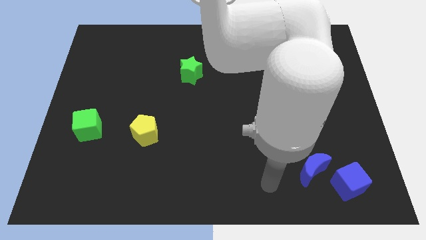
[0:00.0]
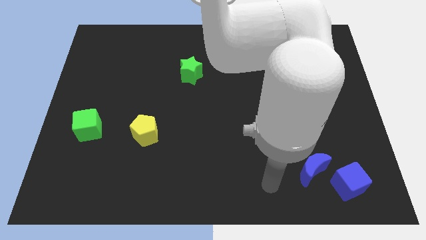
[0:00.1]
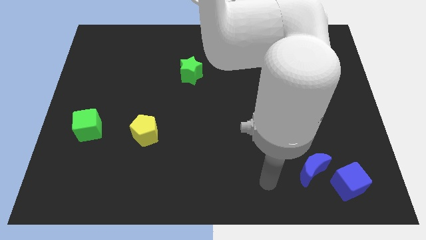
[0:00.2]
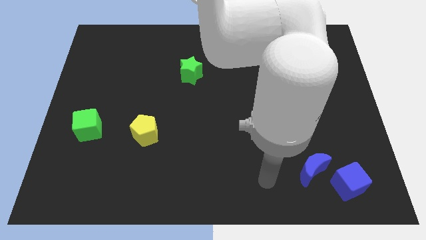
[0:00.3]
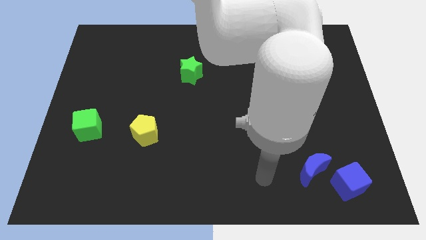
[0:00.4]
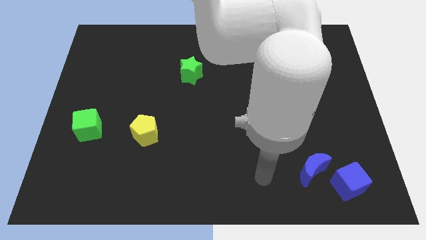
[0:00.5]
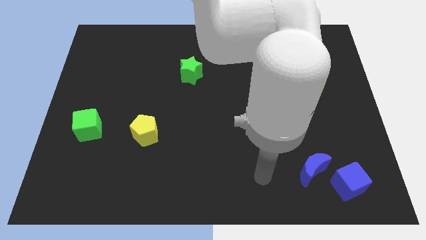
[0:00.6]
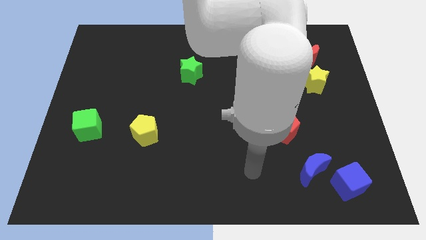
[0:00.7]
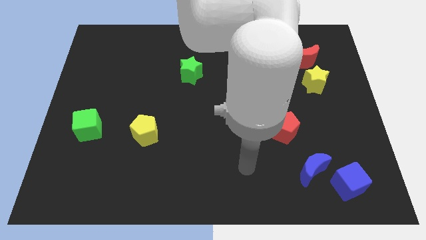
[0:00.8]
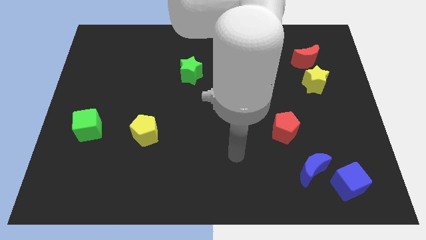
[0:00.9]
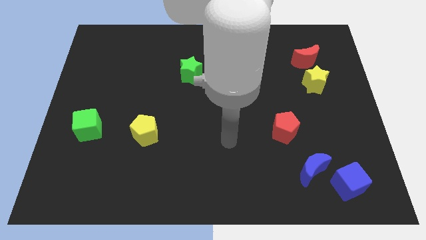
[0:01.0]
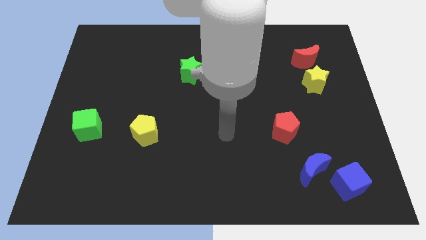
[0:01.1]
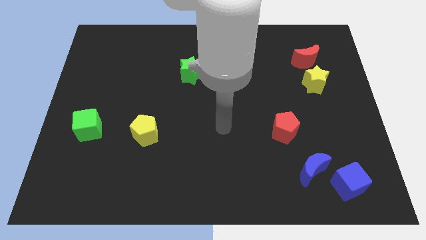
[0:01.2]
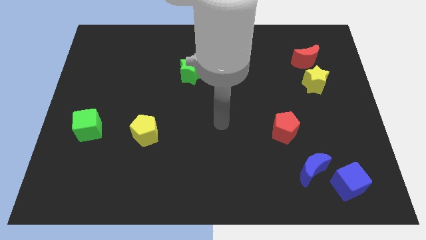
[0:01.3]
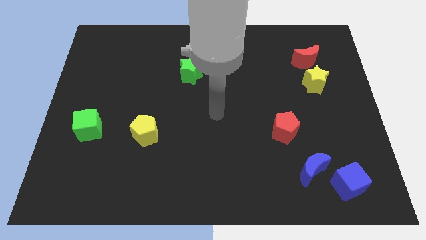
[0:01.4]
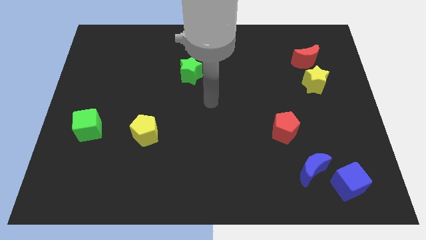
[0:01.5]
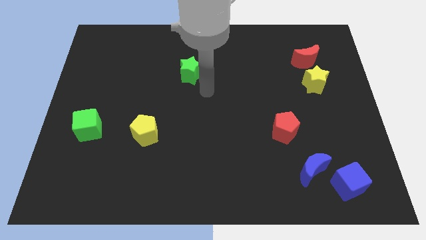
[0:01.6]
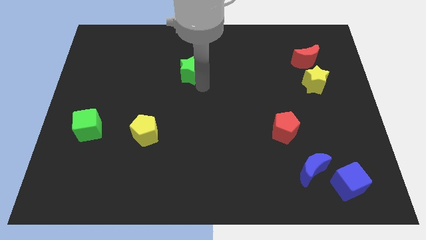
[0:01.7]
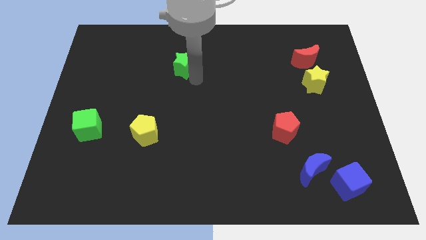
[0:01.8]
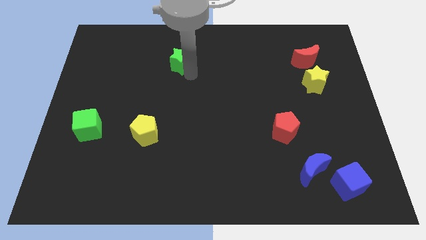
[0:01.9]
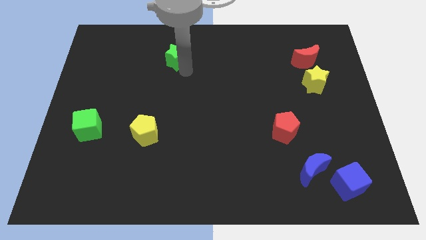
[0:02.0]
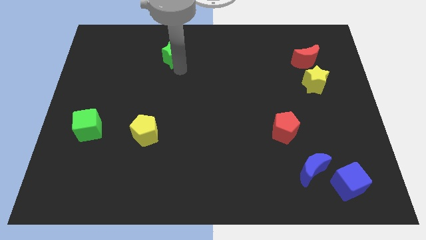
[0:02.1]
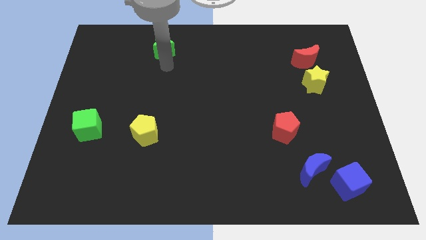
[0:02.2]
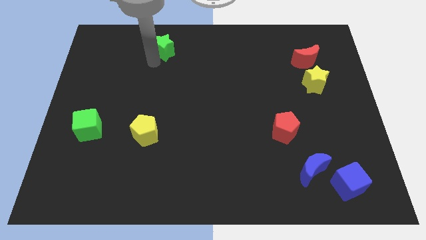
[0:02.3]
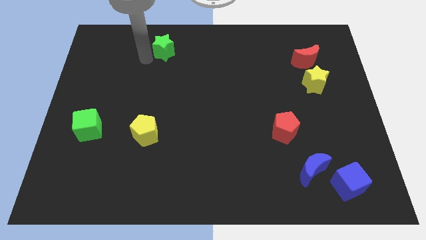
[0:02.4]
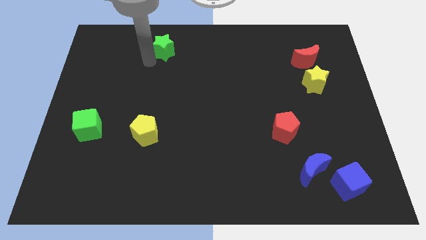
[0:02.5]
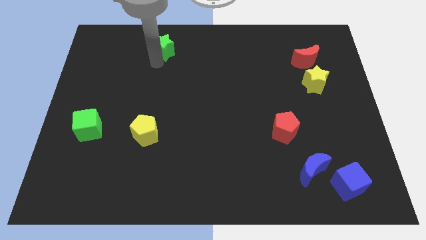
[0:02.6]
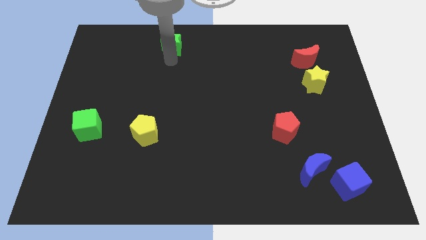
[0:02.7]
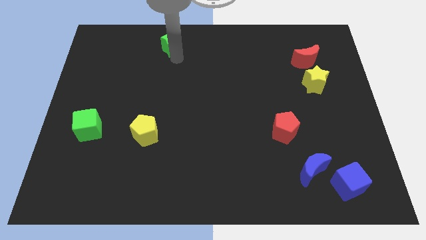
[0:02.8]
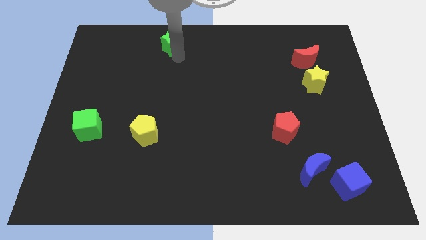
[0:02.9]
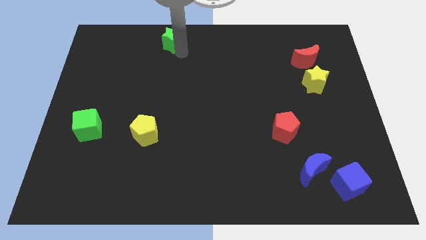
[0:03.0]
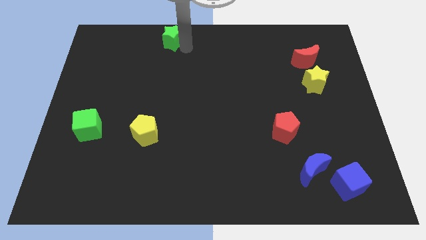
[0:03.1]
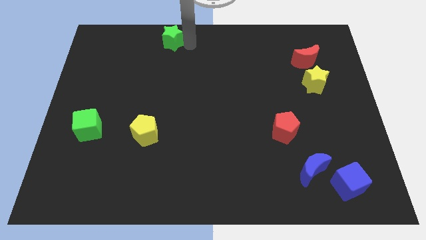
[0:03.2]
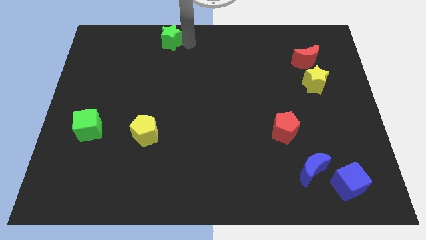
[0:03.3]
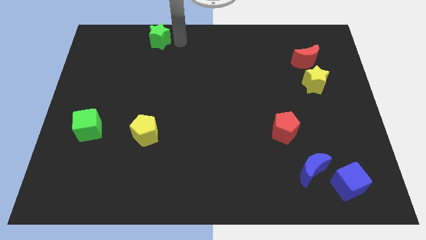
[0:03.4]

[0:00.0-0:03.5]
slide the green star vertically above the yellow pentagon

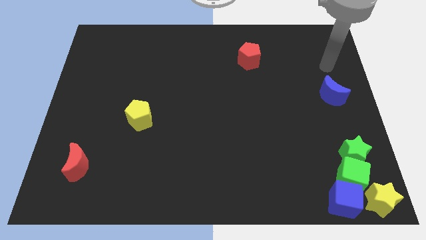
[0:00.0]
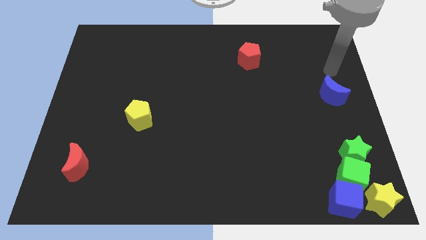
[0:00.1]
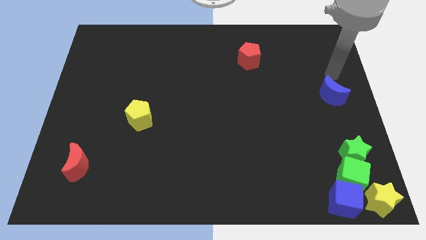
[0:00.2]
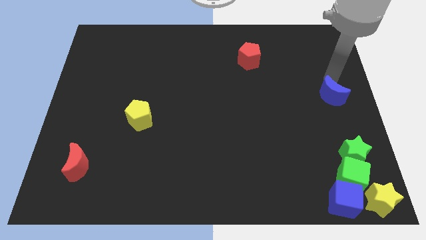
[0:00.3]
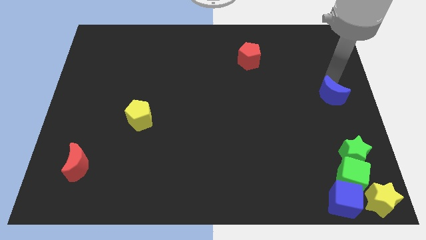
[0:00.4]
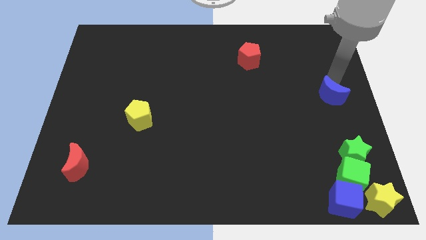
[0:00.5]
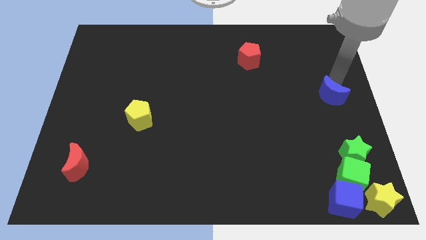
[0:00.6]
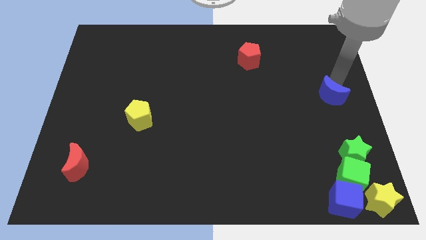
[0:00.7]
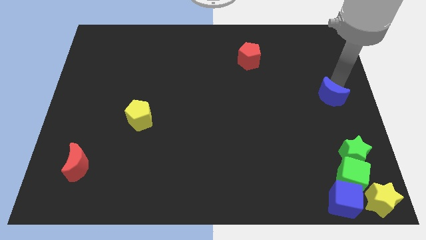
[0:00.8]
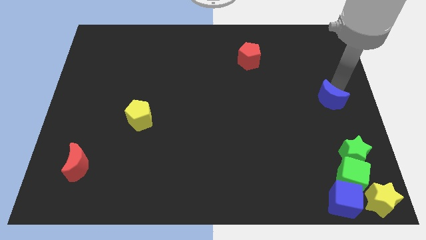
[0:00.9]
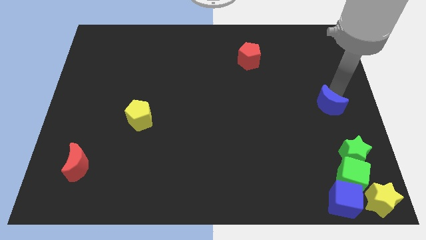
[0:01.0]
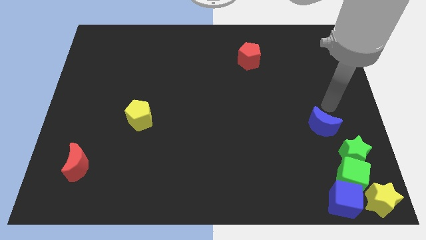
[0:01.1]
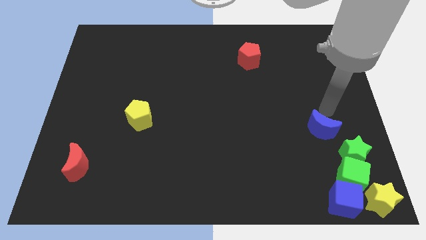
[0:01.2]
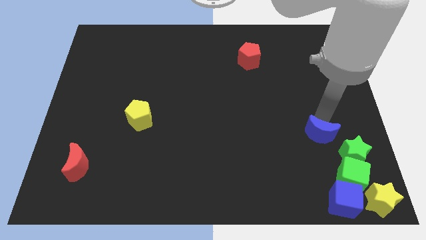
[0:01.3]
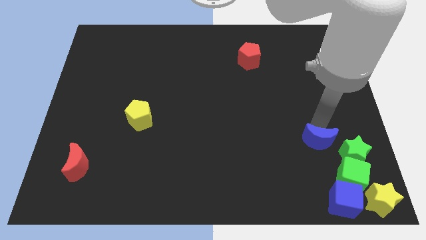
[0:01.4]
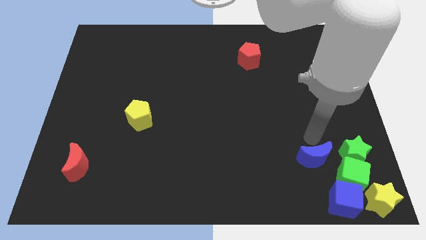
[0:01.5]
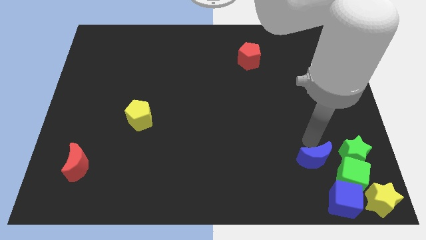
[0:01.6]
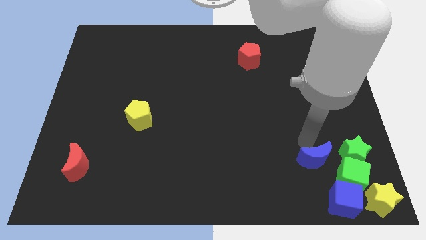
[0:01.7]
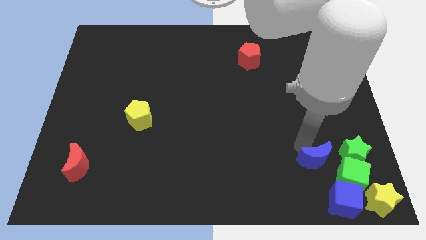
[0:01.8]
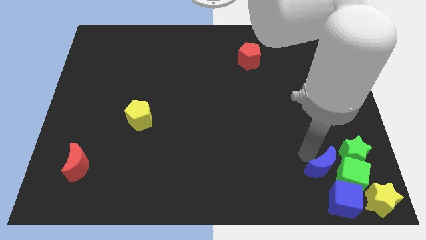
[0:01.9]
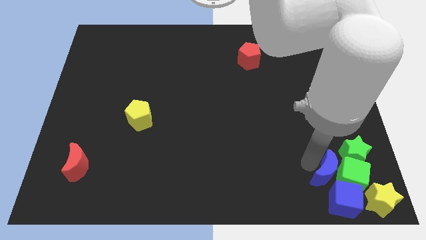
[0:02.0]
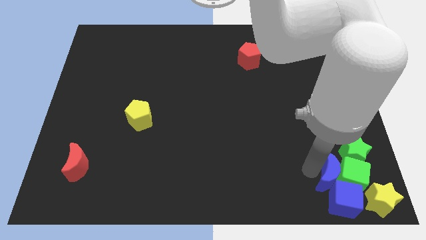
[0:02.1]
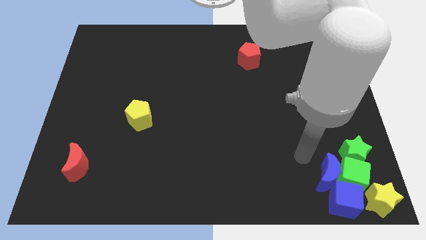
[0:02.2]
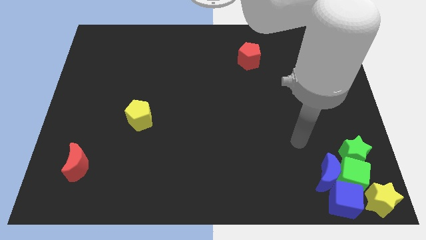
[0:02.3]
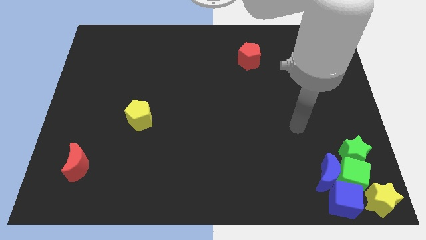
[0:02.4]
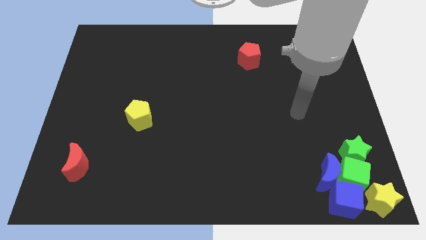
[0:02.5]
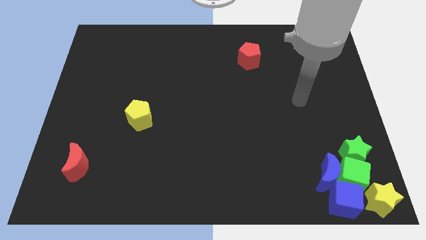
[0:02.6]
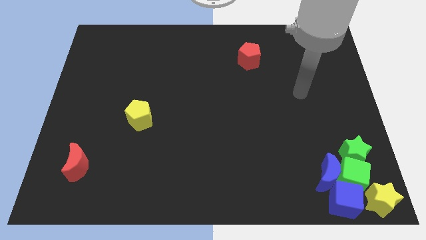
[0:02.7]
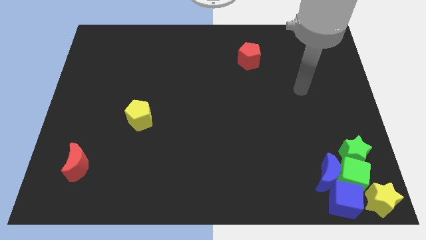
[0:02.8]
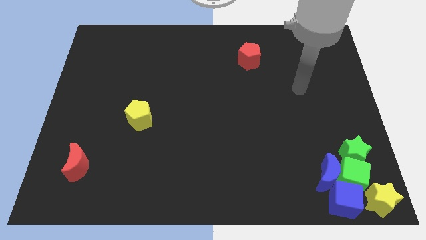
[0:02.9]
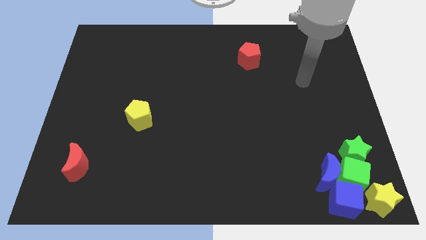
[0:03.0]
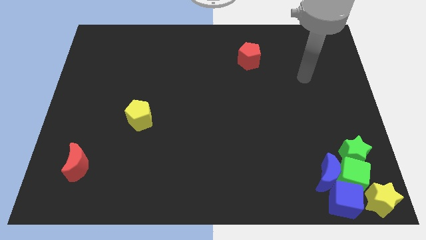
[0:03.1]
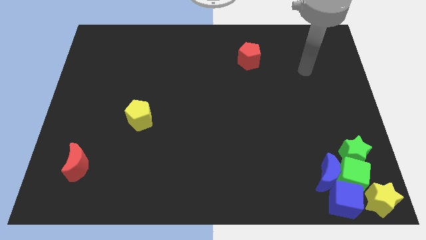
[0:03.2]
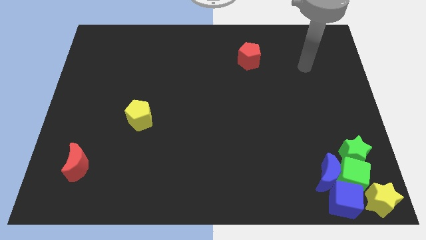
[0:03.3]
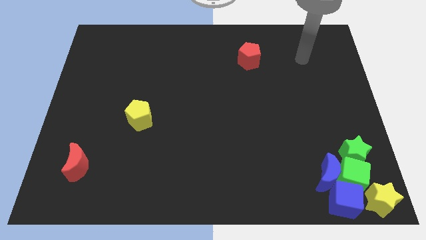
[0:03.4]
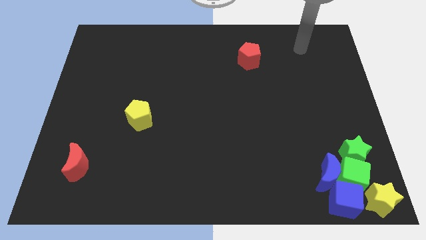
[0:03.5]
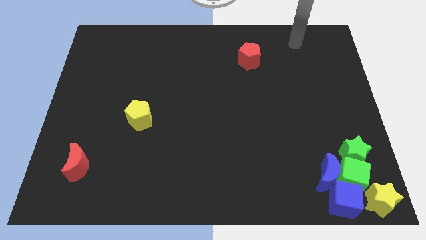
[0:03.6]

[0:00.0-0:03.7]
push blue moon to the left of green cube

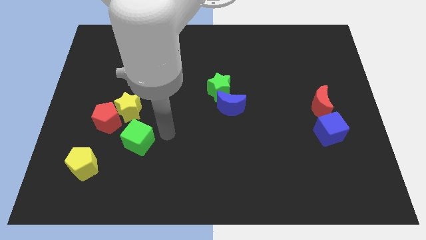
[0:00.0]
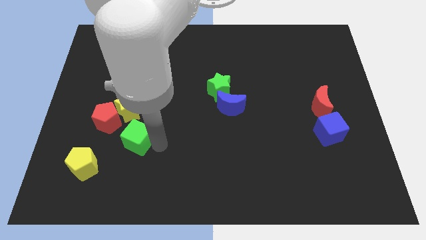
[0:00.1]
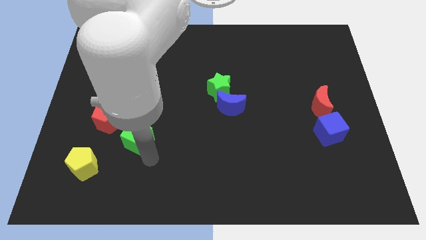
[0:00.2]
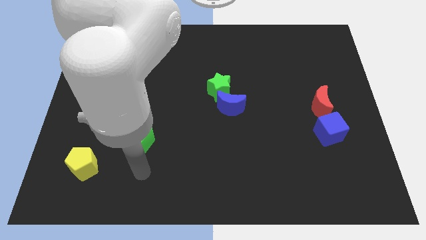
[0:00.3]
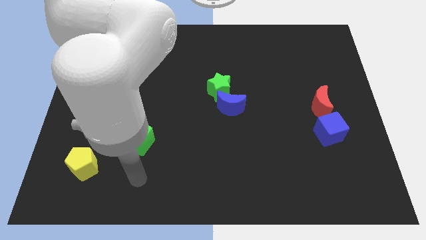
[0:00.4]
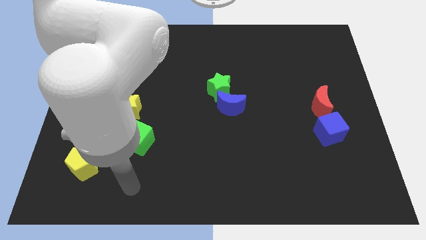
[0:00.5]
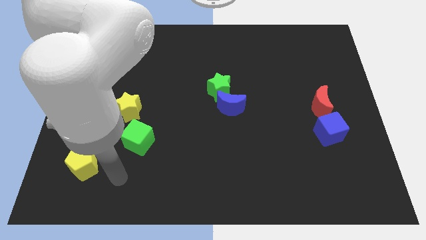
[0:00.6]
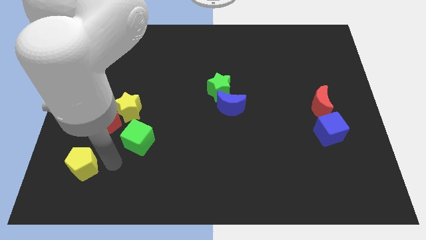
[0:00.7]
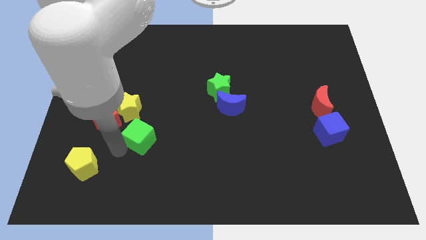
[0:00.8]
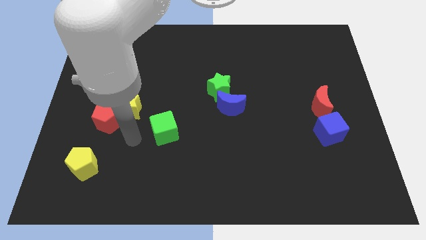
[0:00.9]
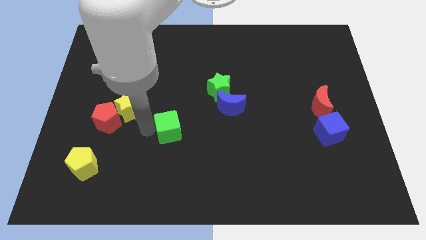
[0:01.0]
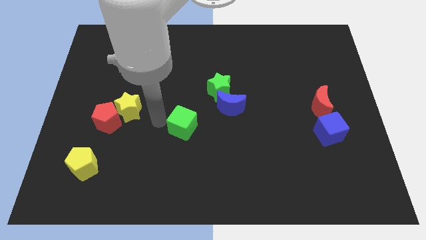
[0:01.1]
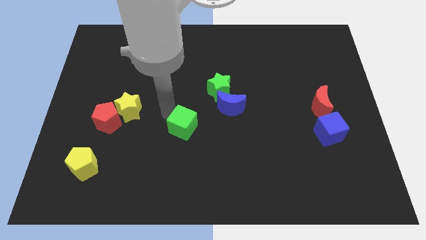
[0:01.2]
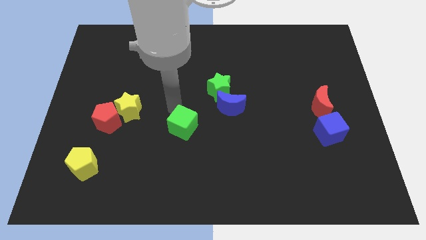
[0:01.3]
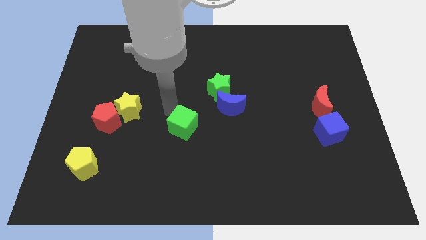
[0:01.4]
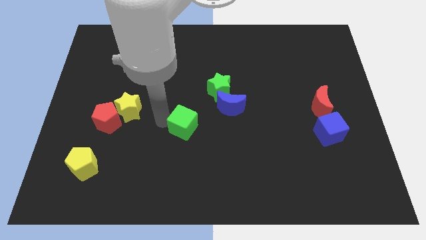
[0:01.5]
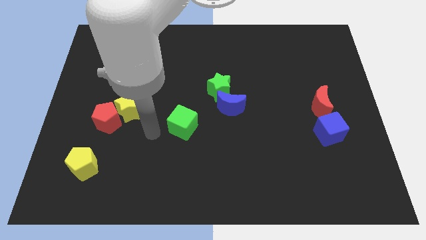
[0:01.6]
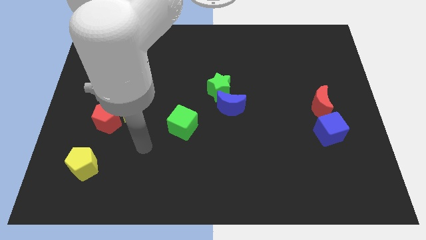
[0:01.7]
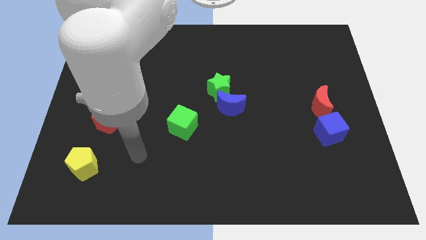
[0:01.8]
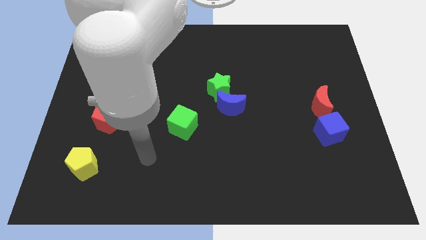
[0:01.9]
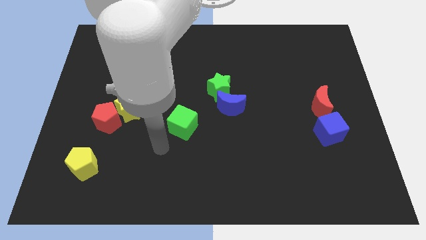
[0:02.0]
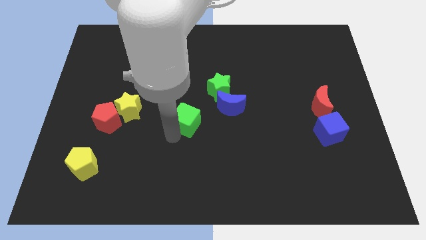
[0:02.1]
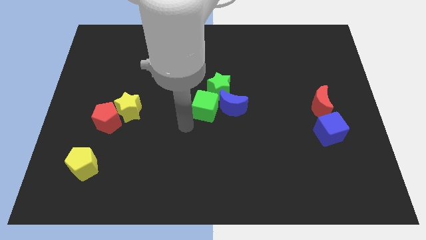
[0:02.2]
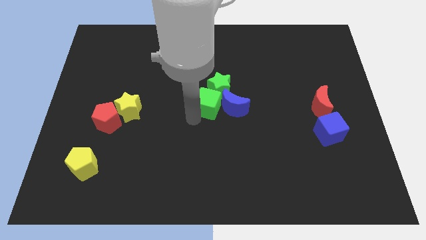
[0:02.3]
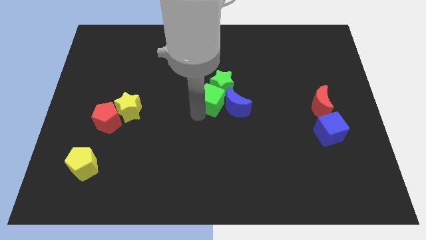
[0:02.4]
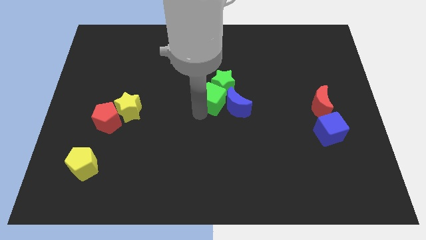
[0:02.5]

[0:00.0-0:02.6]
move the green cube into the green star
